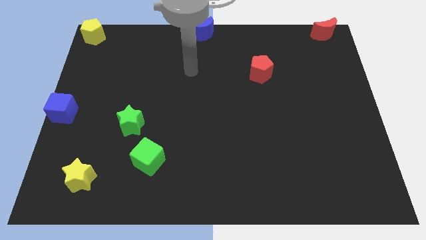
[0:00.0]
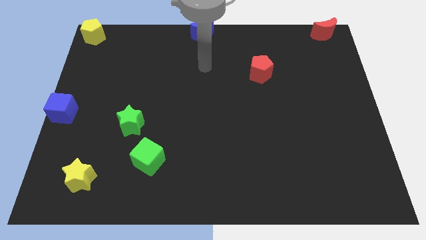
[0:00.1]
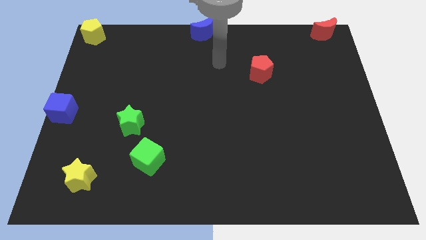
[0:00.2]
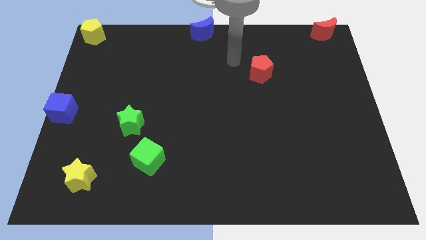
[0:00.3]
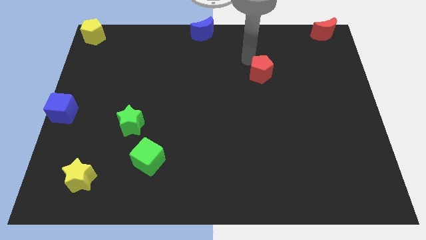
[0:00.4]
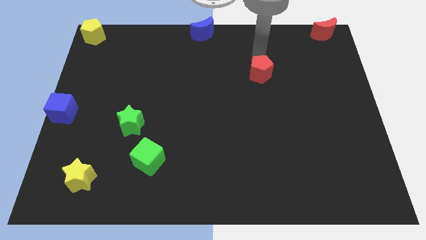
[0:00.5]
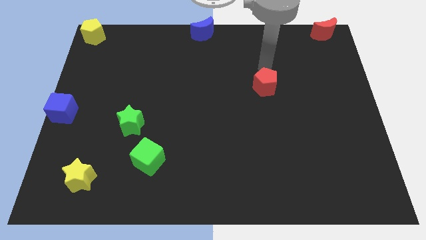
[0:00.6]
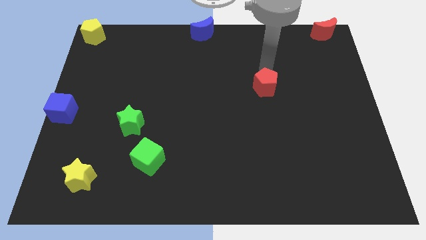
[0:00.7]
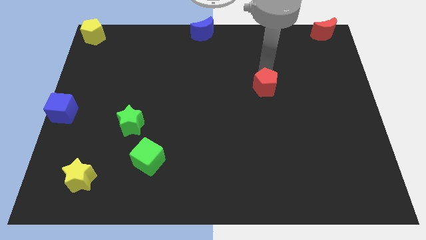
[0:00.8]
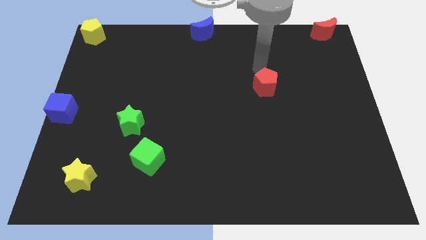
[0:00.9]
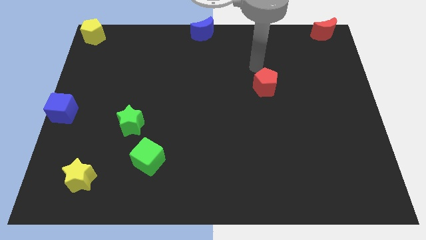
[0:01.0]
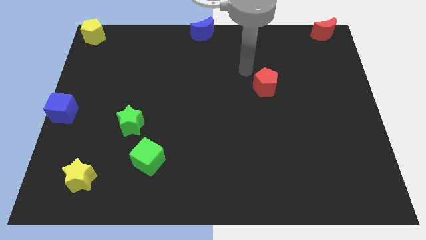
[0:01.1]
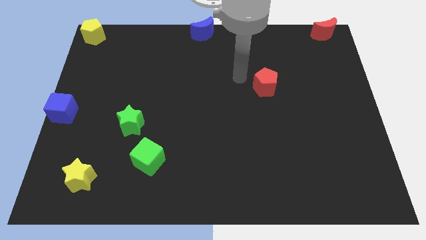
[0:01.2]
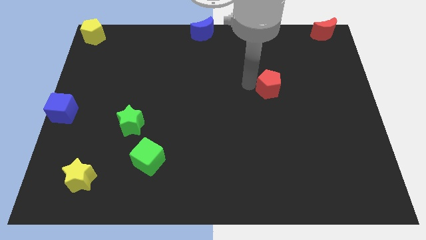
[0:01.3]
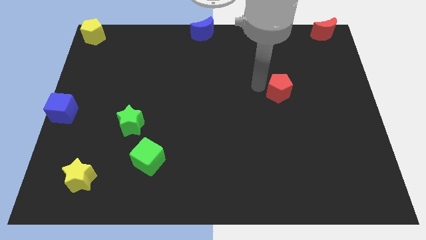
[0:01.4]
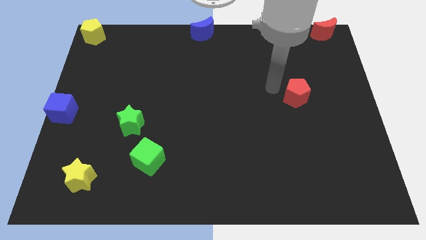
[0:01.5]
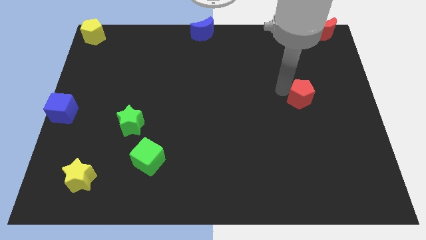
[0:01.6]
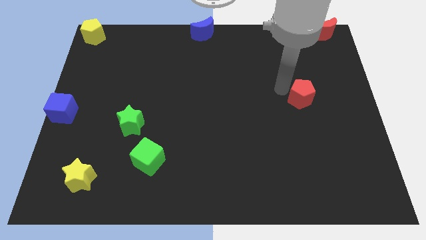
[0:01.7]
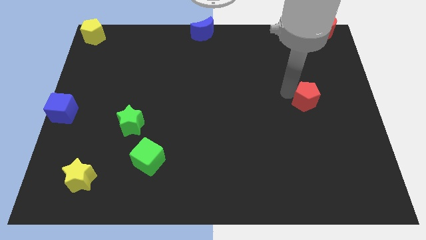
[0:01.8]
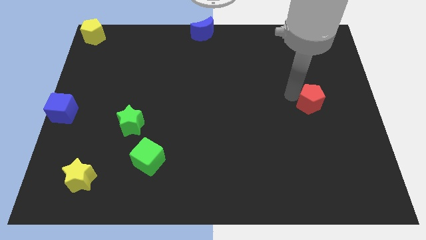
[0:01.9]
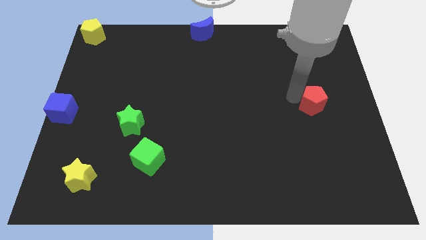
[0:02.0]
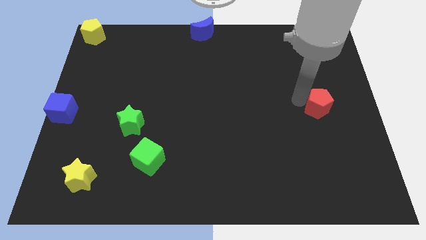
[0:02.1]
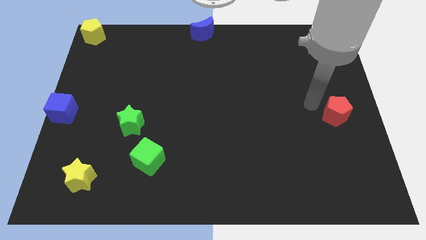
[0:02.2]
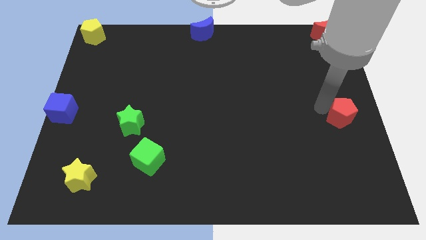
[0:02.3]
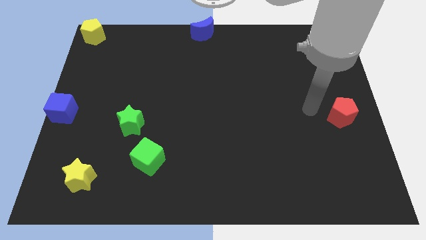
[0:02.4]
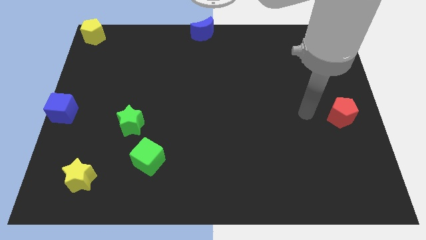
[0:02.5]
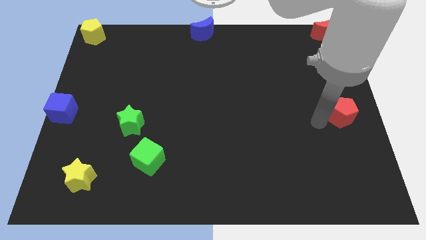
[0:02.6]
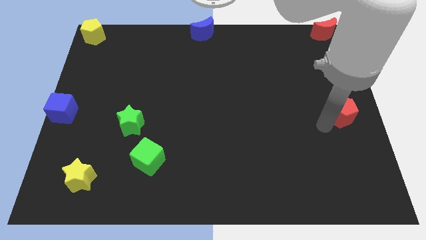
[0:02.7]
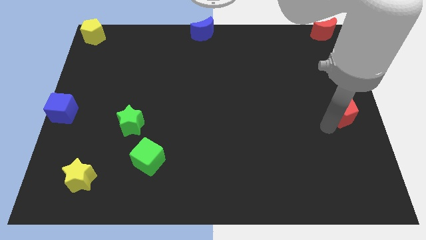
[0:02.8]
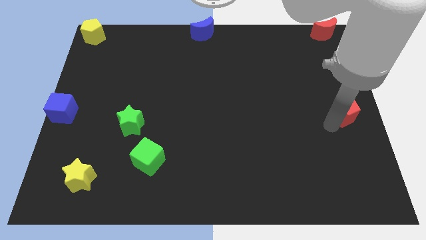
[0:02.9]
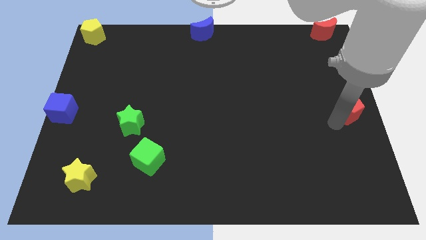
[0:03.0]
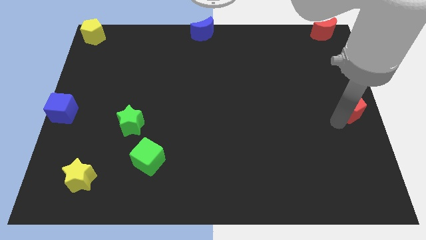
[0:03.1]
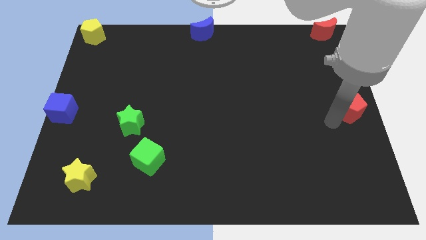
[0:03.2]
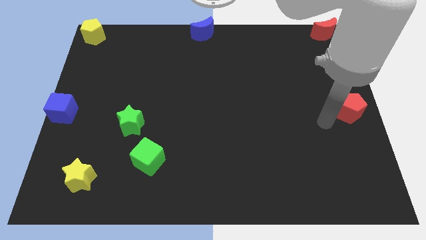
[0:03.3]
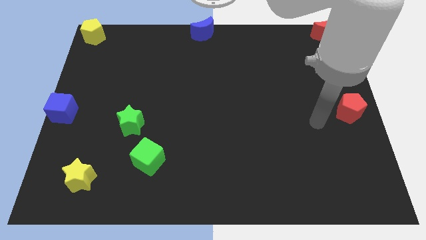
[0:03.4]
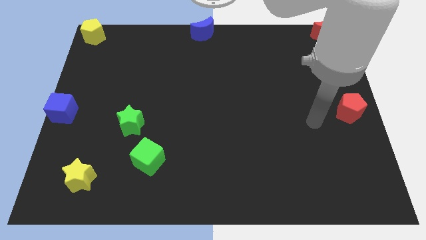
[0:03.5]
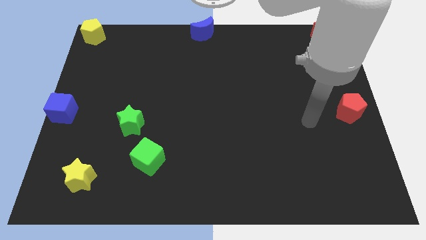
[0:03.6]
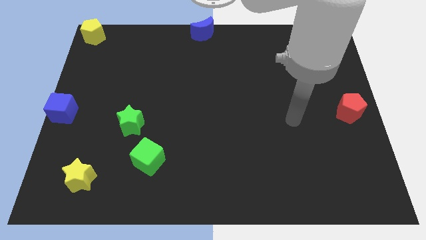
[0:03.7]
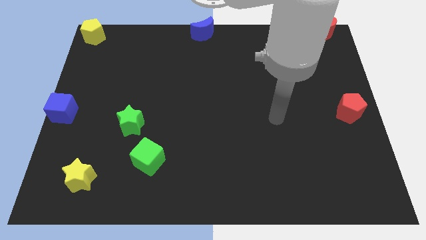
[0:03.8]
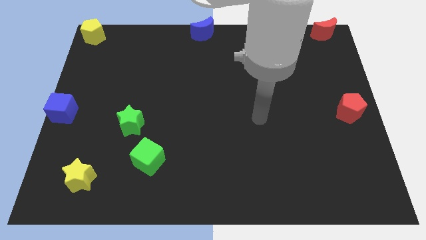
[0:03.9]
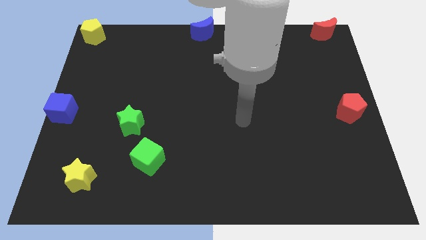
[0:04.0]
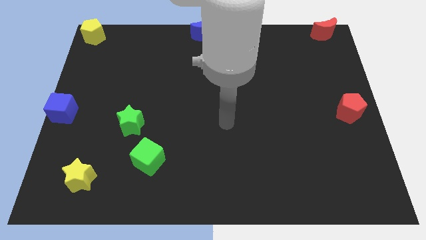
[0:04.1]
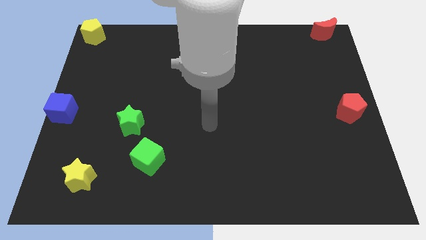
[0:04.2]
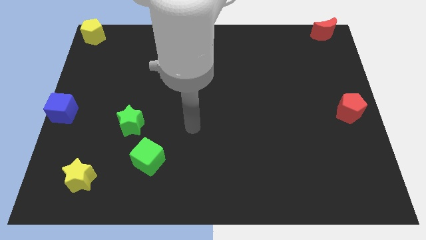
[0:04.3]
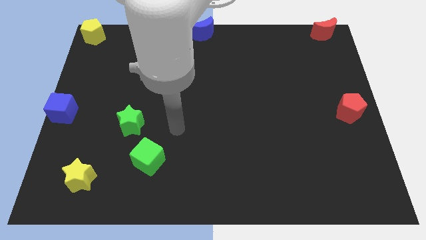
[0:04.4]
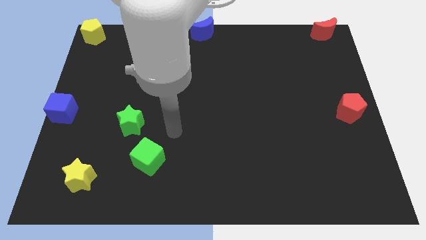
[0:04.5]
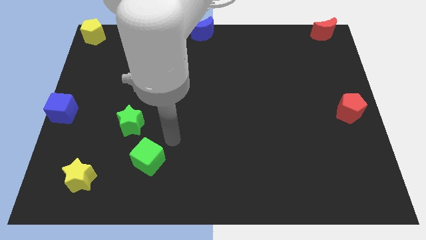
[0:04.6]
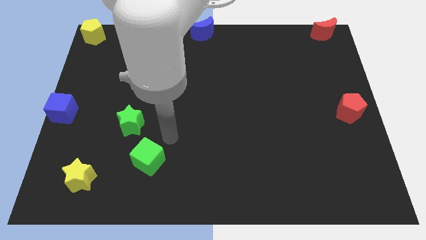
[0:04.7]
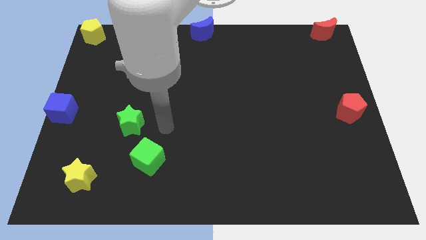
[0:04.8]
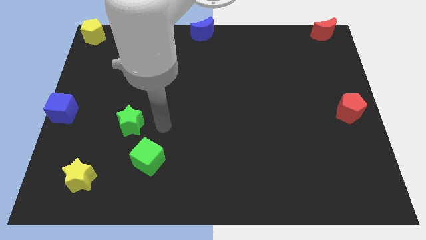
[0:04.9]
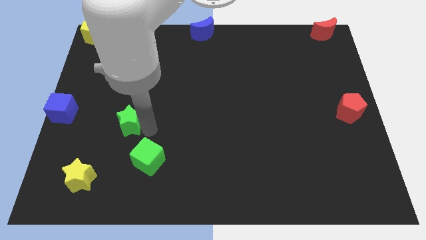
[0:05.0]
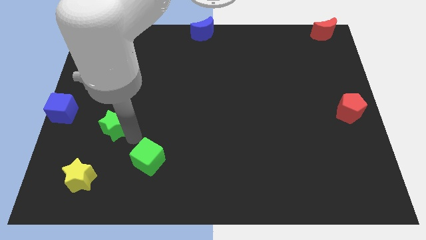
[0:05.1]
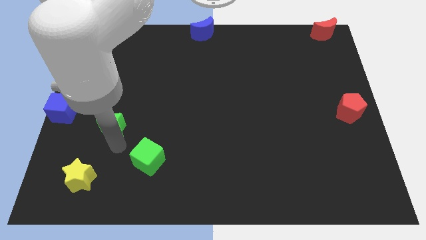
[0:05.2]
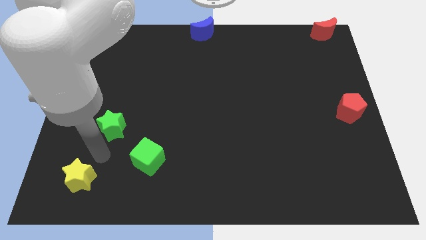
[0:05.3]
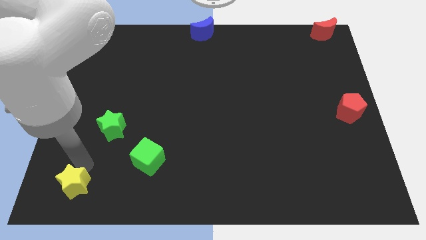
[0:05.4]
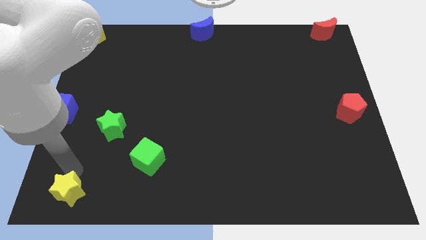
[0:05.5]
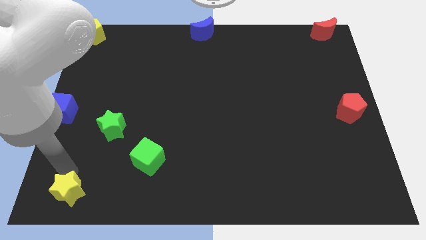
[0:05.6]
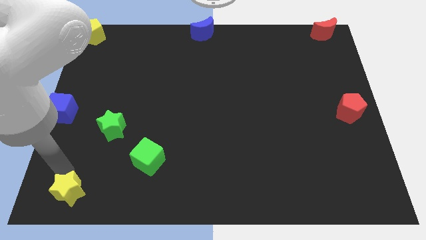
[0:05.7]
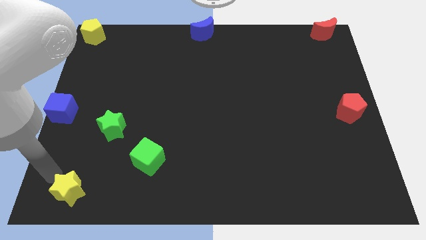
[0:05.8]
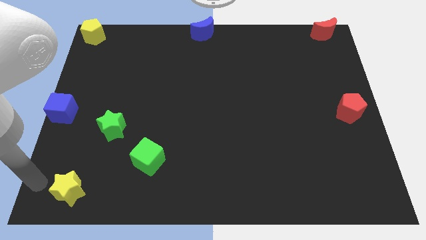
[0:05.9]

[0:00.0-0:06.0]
place the red pentagon to bottom right center of the board

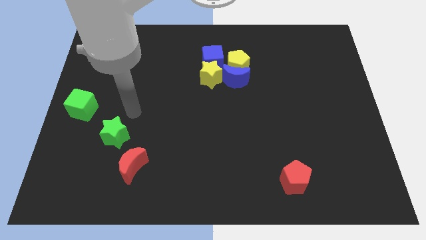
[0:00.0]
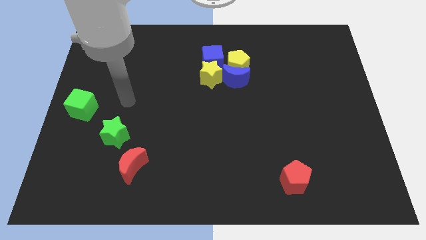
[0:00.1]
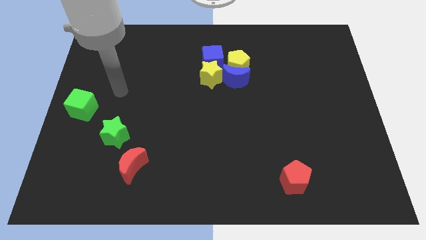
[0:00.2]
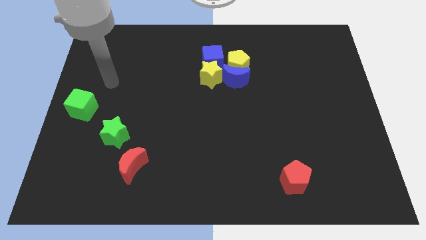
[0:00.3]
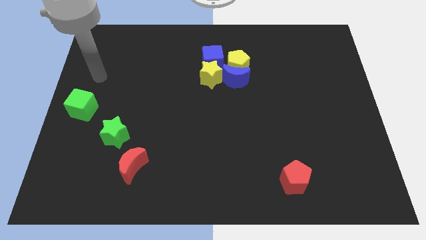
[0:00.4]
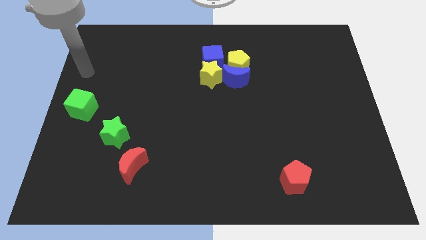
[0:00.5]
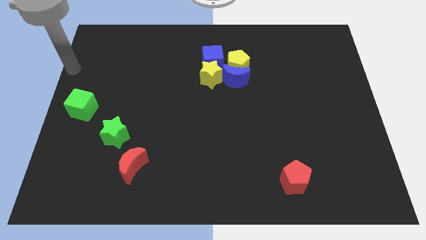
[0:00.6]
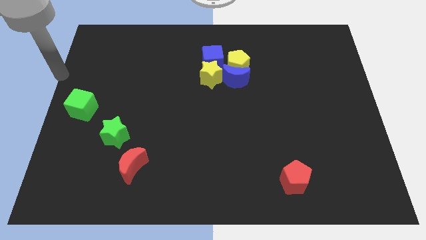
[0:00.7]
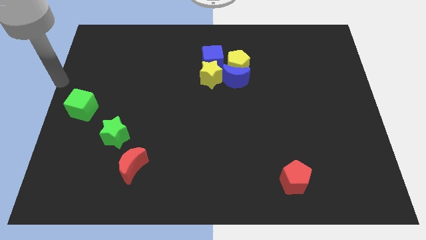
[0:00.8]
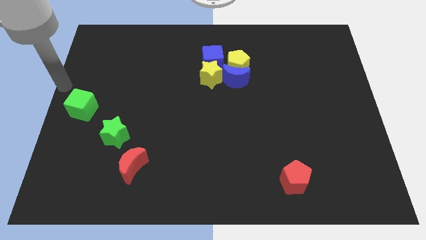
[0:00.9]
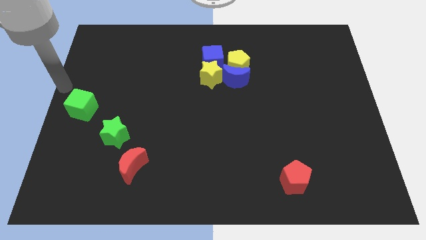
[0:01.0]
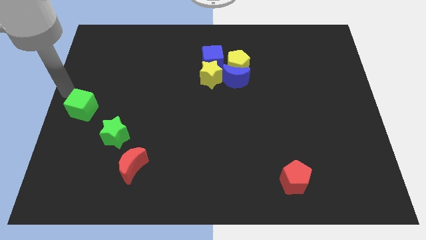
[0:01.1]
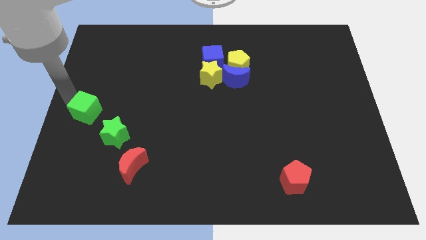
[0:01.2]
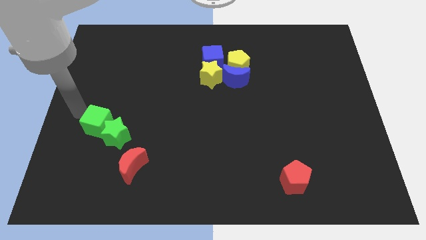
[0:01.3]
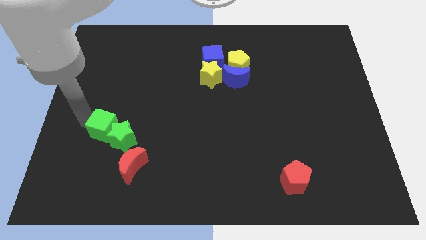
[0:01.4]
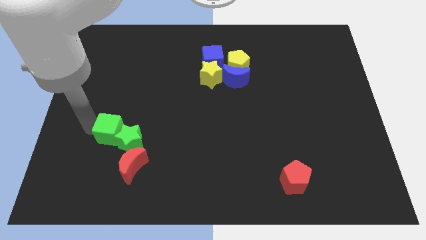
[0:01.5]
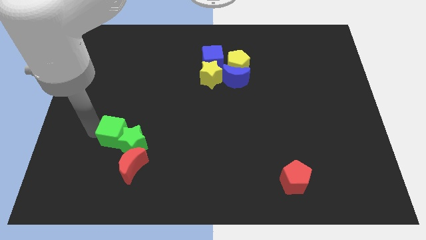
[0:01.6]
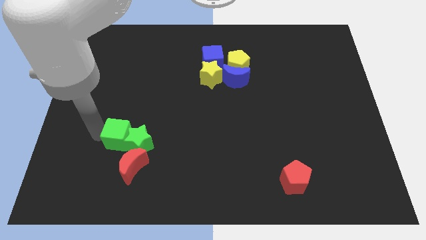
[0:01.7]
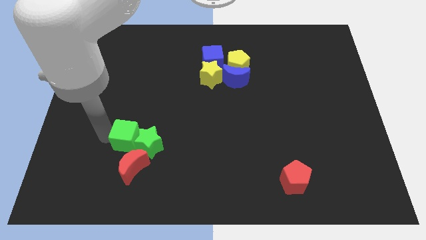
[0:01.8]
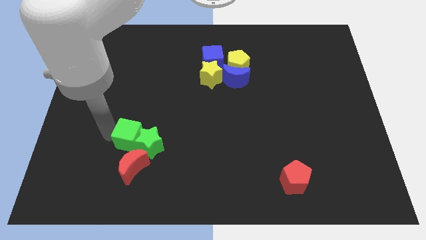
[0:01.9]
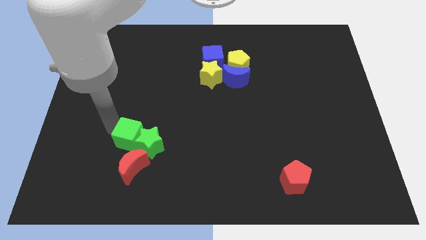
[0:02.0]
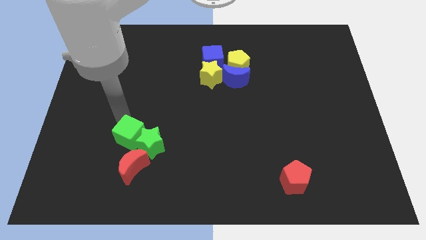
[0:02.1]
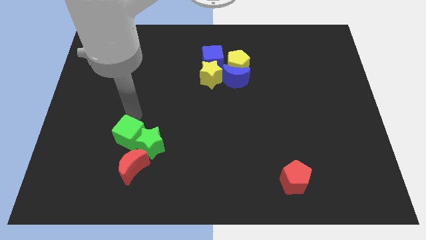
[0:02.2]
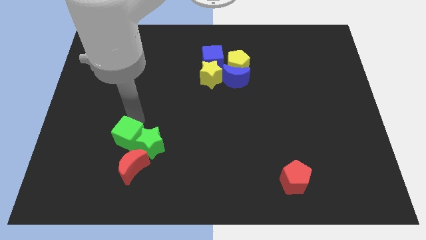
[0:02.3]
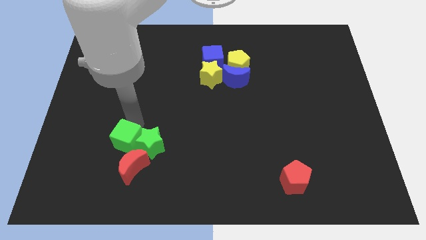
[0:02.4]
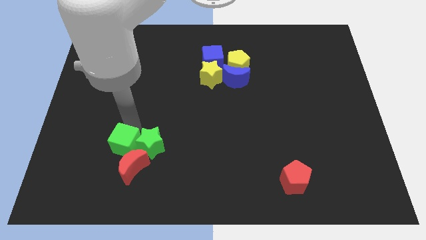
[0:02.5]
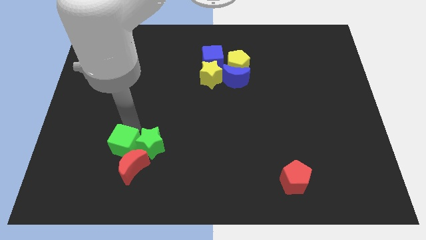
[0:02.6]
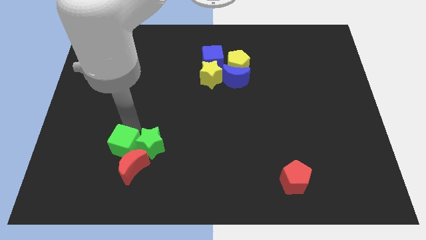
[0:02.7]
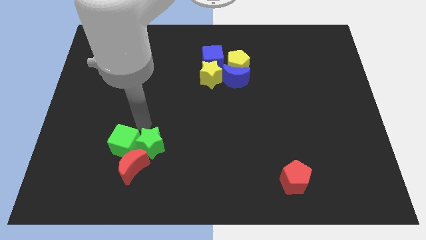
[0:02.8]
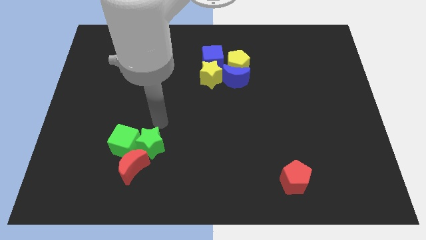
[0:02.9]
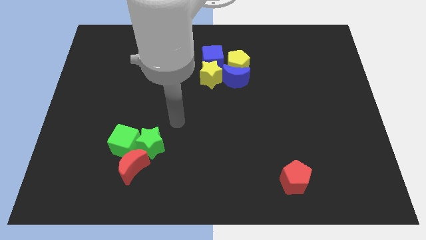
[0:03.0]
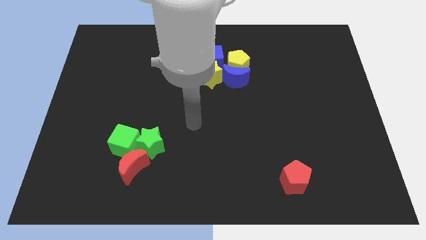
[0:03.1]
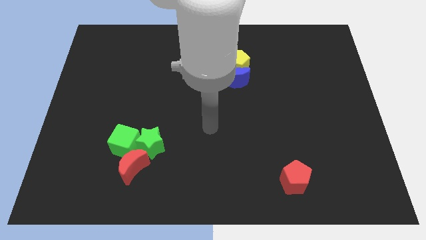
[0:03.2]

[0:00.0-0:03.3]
join the green blocks into the red crescent
